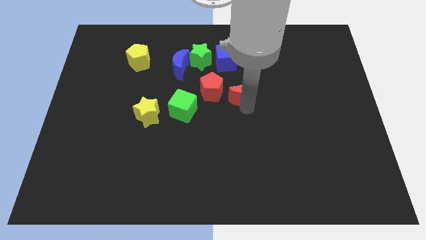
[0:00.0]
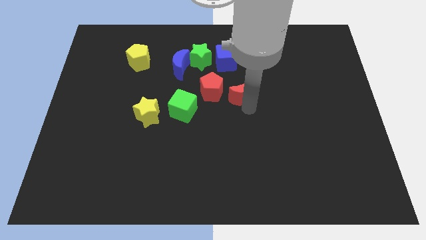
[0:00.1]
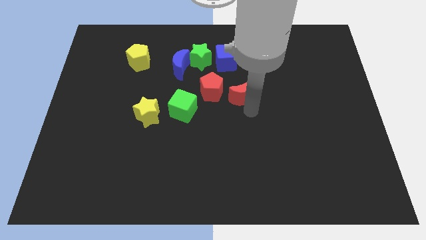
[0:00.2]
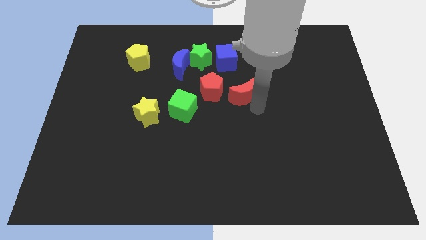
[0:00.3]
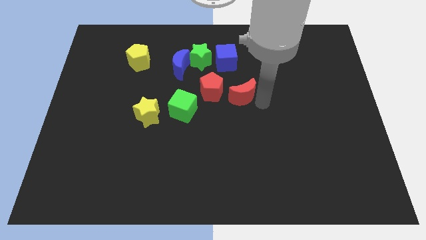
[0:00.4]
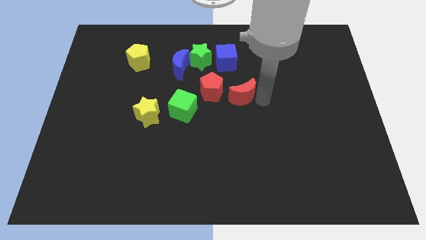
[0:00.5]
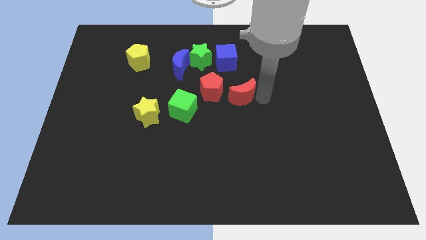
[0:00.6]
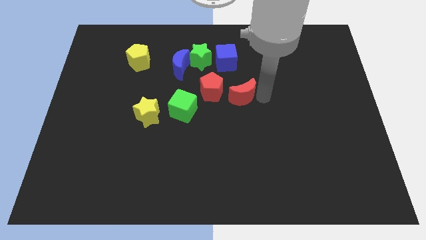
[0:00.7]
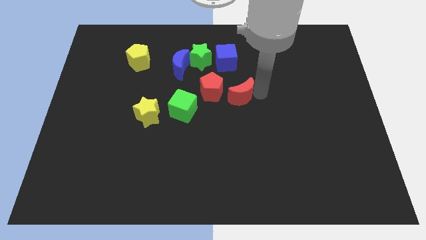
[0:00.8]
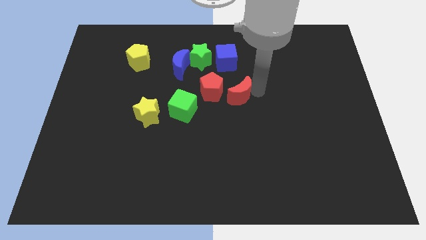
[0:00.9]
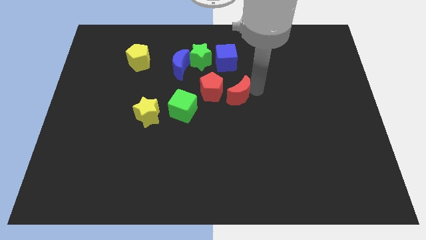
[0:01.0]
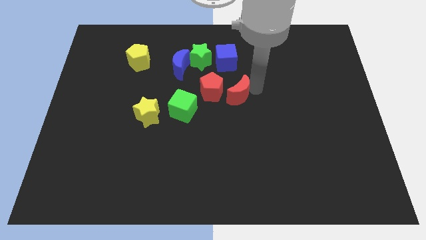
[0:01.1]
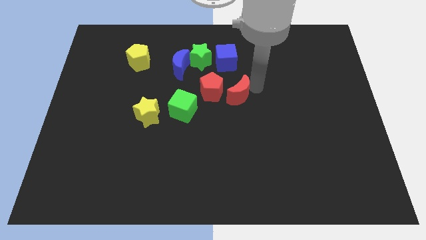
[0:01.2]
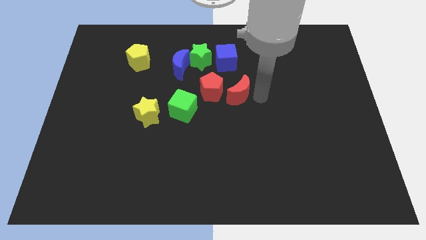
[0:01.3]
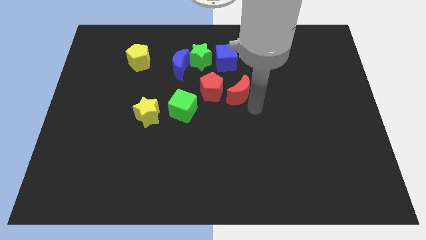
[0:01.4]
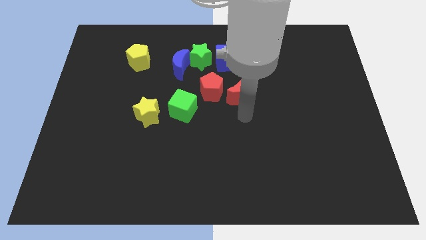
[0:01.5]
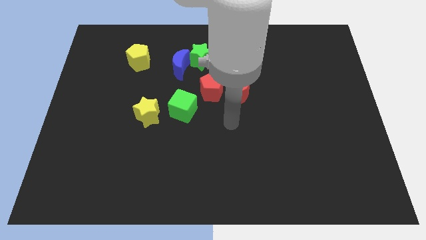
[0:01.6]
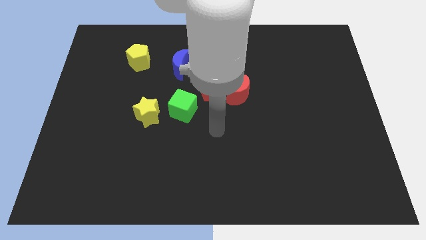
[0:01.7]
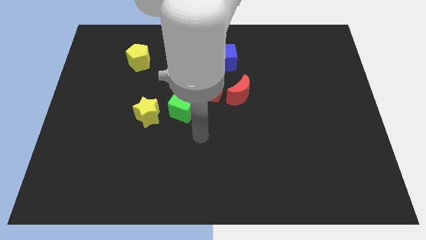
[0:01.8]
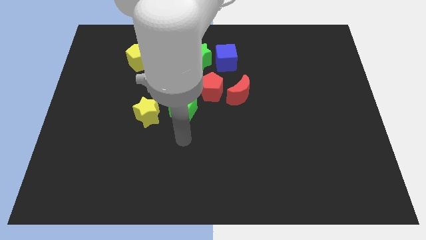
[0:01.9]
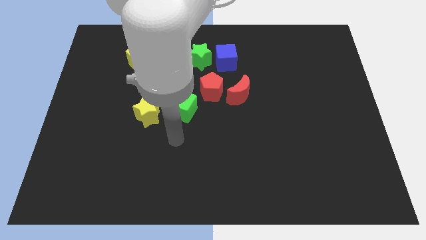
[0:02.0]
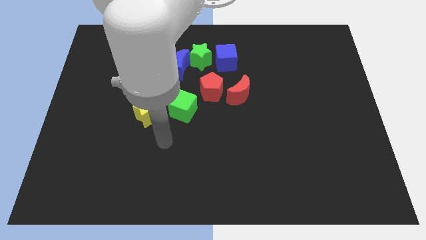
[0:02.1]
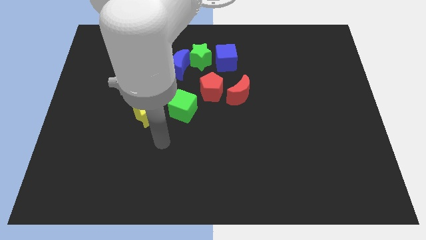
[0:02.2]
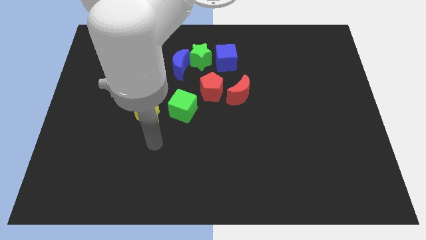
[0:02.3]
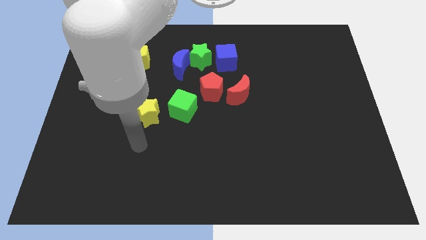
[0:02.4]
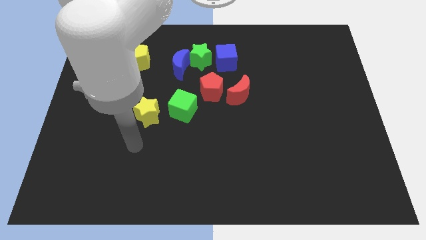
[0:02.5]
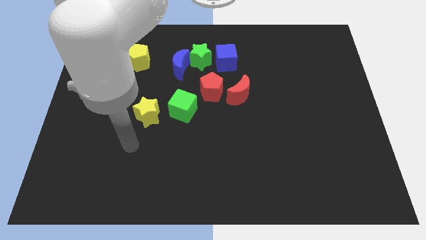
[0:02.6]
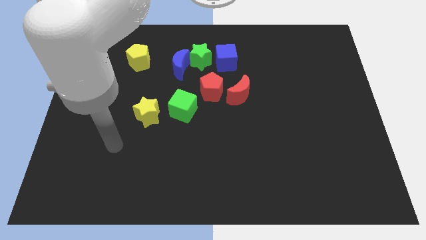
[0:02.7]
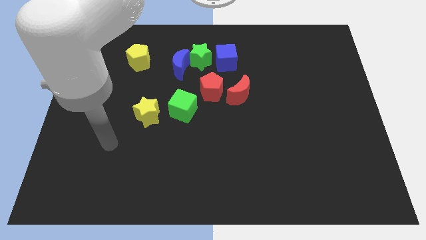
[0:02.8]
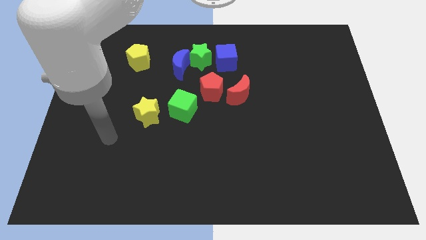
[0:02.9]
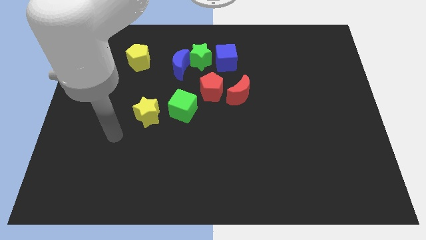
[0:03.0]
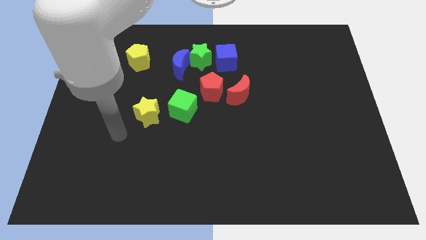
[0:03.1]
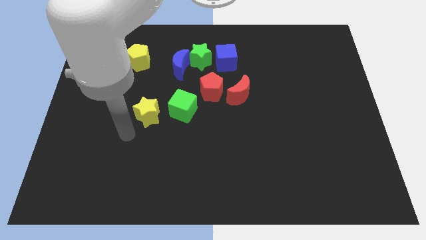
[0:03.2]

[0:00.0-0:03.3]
move your arm near yellow star

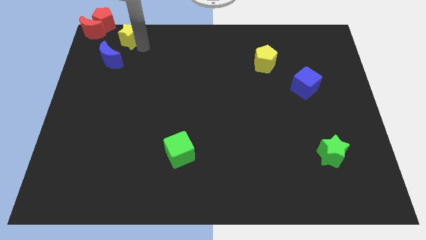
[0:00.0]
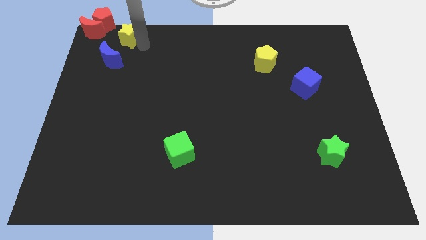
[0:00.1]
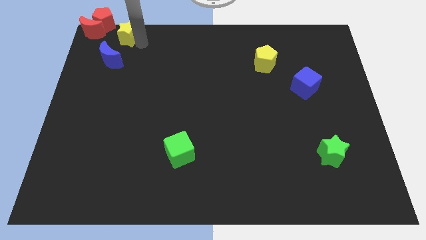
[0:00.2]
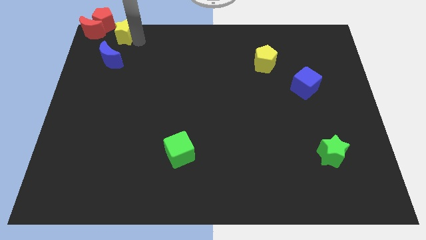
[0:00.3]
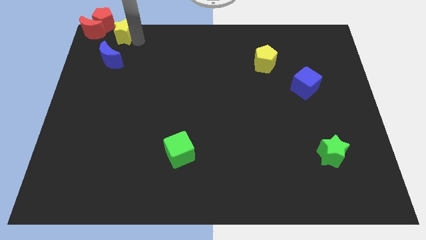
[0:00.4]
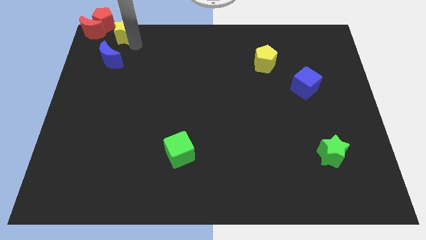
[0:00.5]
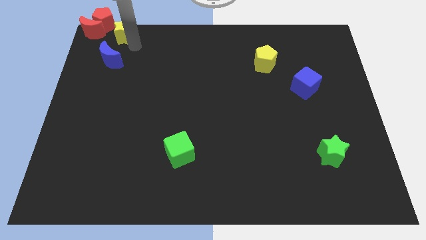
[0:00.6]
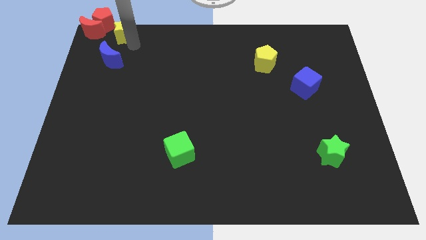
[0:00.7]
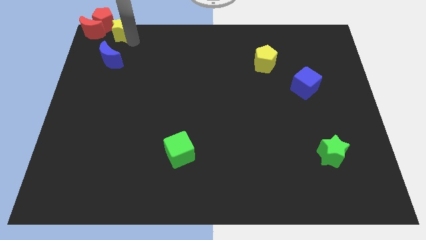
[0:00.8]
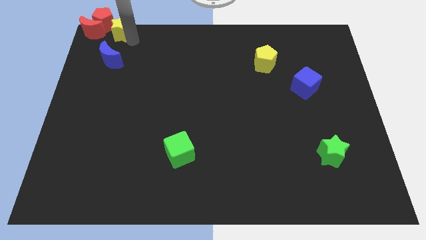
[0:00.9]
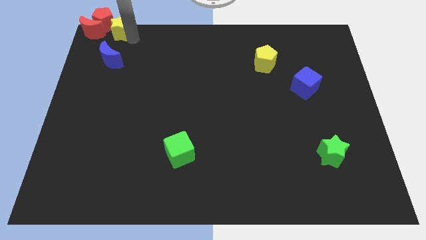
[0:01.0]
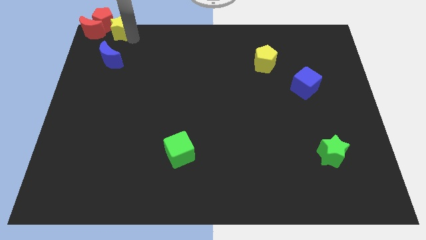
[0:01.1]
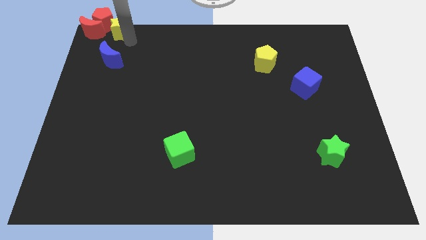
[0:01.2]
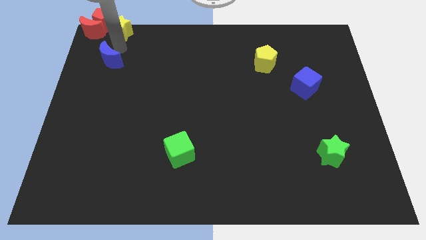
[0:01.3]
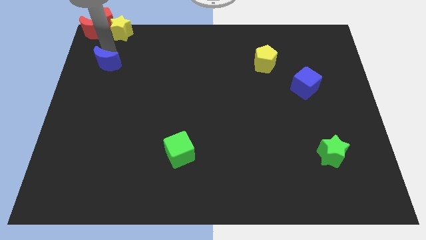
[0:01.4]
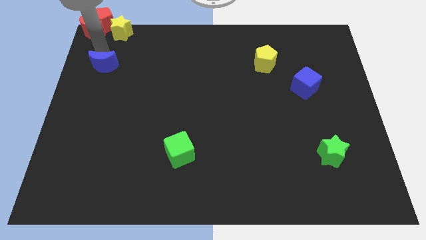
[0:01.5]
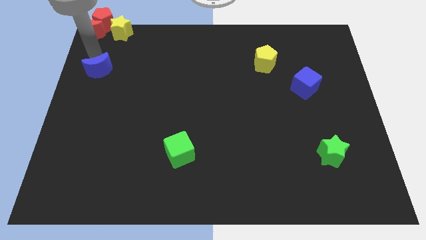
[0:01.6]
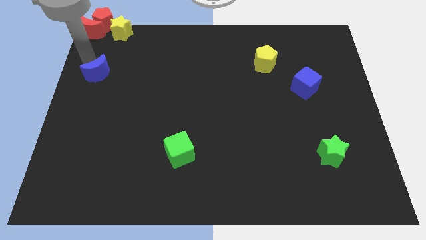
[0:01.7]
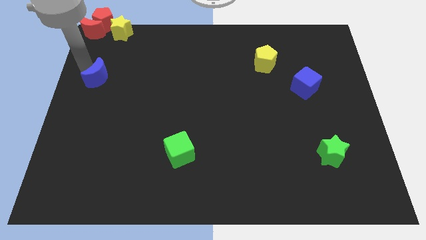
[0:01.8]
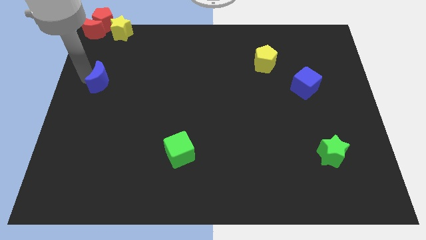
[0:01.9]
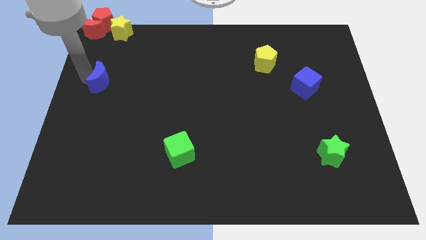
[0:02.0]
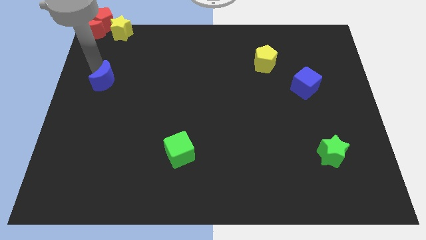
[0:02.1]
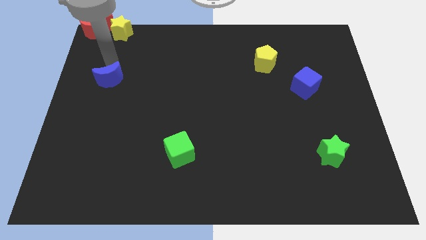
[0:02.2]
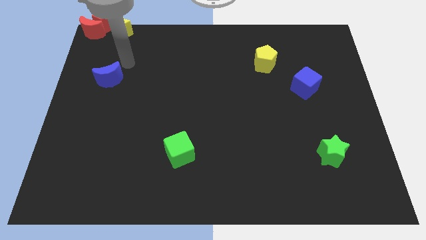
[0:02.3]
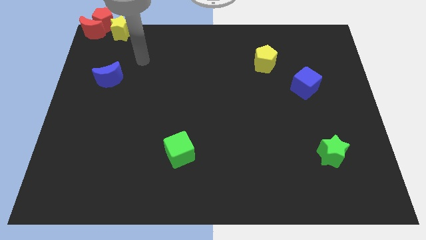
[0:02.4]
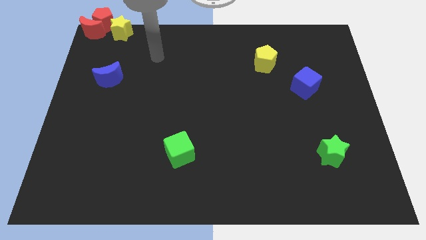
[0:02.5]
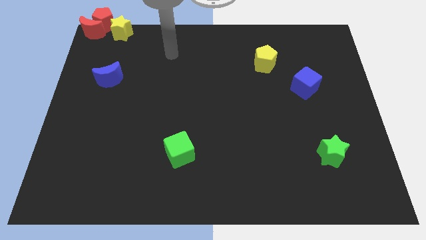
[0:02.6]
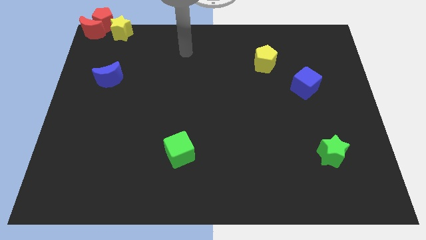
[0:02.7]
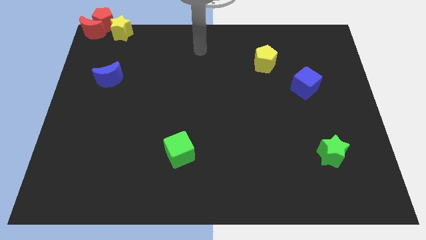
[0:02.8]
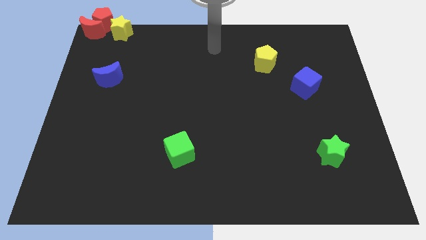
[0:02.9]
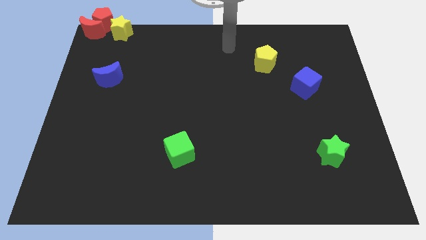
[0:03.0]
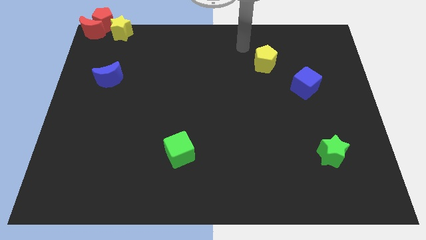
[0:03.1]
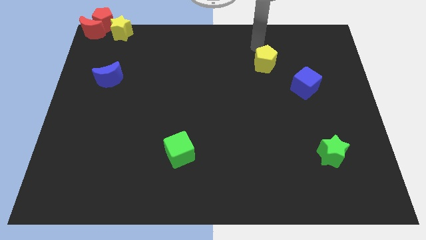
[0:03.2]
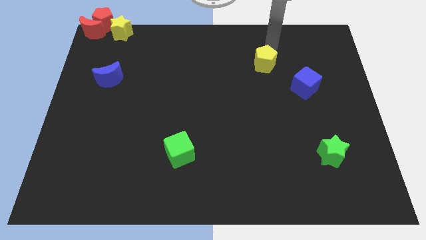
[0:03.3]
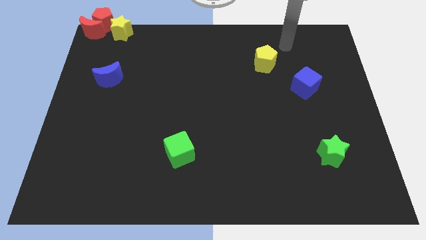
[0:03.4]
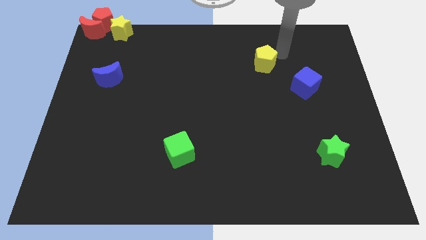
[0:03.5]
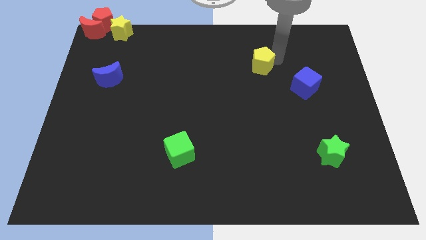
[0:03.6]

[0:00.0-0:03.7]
push the blue crescent slightly to the bottom

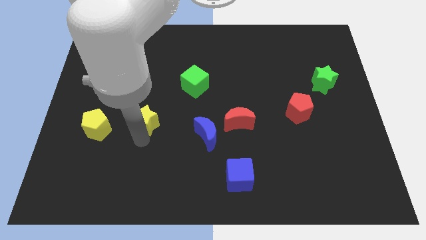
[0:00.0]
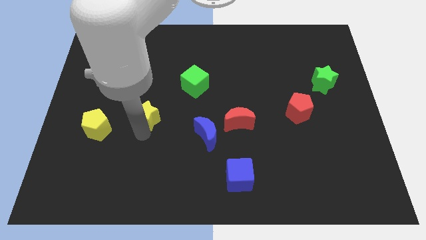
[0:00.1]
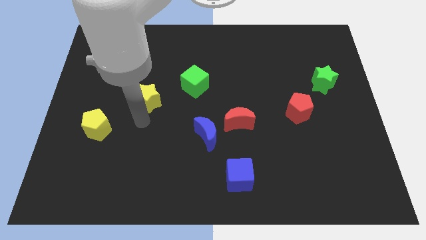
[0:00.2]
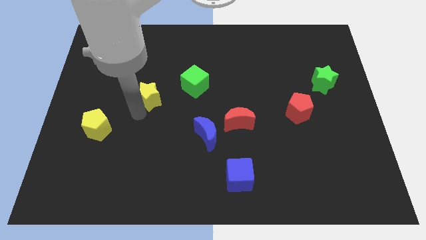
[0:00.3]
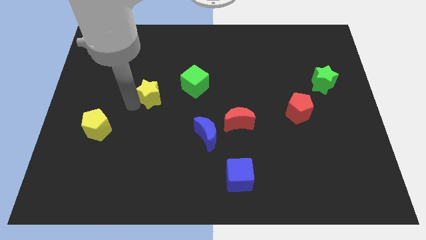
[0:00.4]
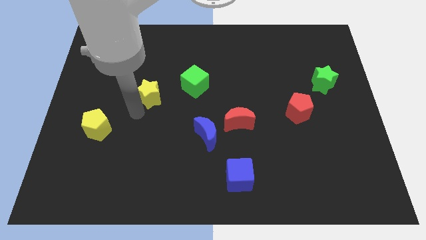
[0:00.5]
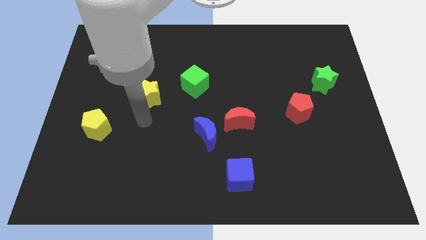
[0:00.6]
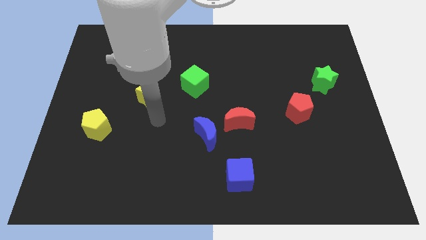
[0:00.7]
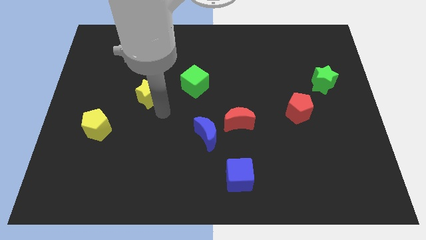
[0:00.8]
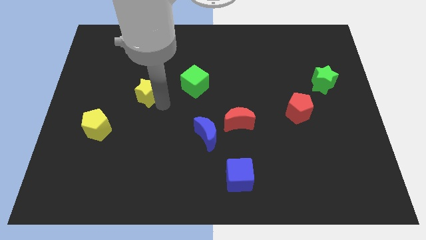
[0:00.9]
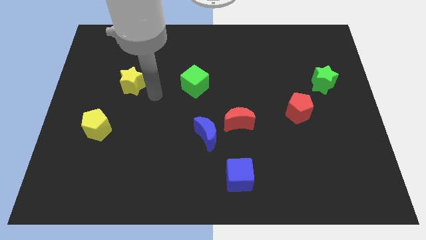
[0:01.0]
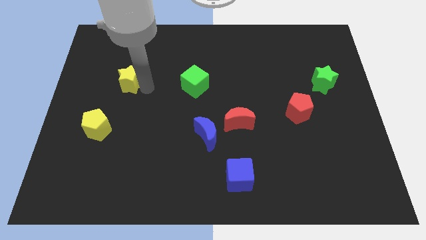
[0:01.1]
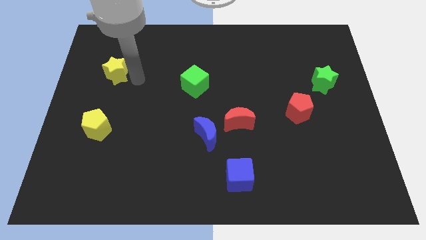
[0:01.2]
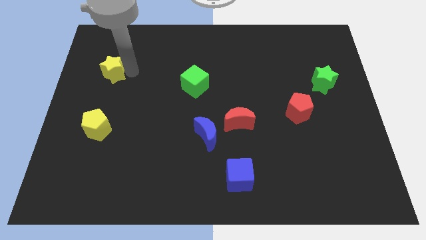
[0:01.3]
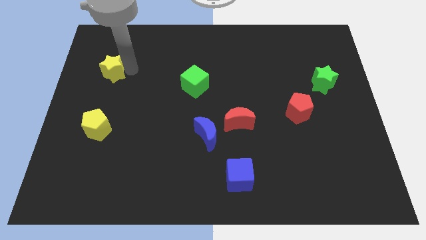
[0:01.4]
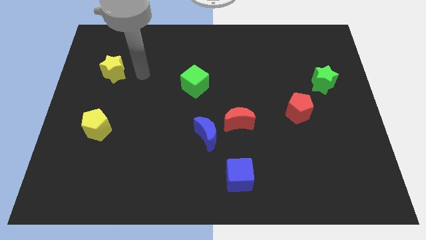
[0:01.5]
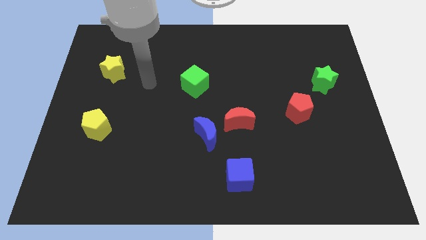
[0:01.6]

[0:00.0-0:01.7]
place the yellow star vertically above the yellow pentagon

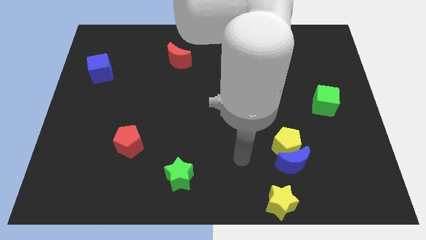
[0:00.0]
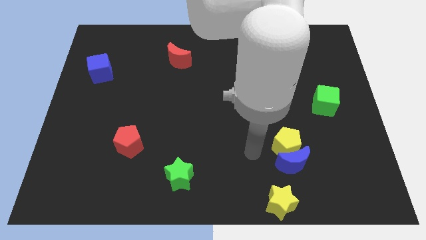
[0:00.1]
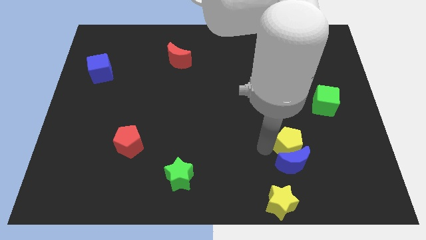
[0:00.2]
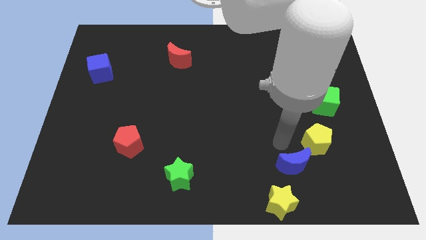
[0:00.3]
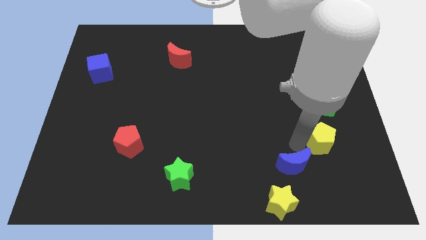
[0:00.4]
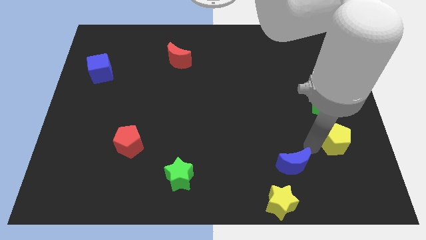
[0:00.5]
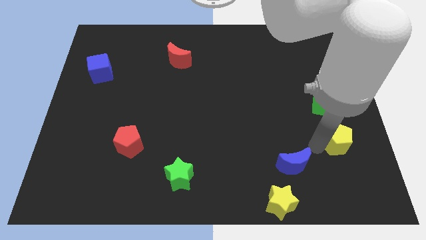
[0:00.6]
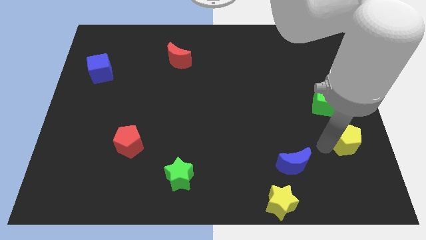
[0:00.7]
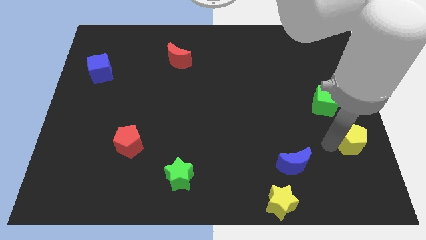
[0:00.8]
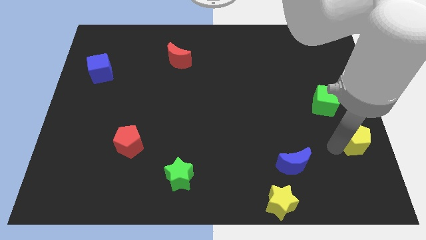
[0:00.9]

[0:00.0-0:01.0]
place the yellow pentagon diagonally to yellow star
